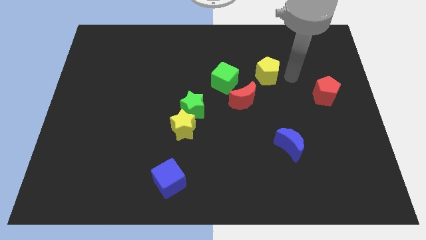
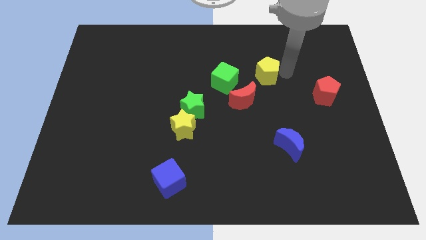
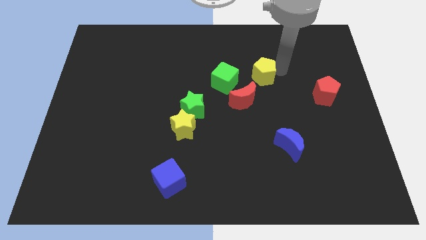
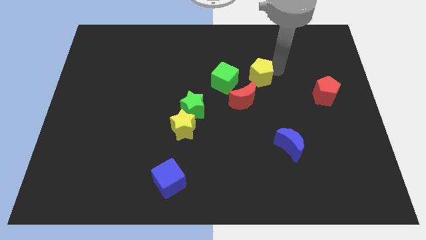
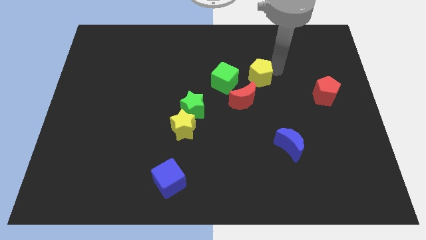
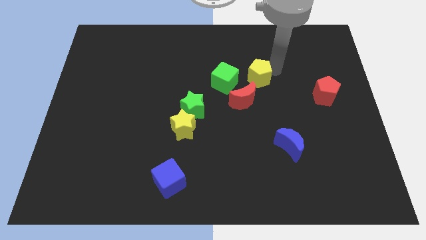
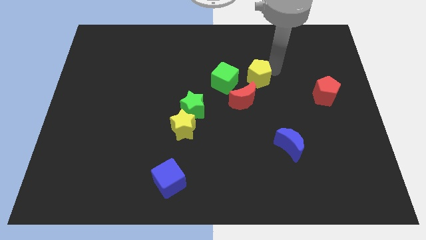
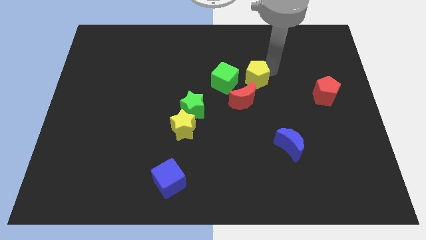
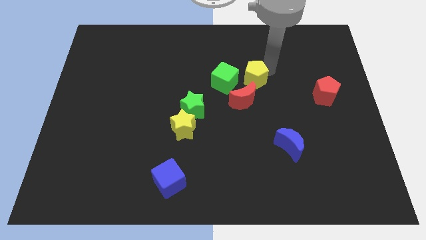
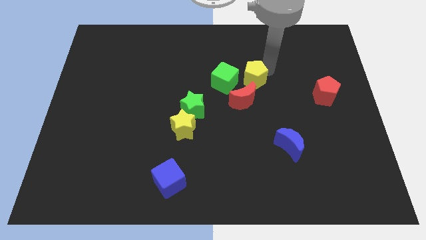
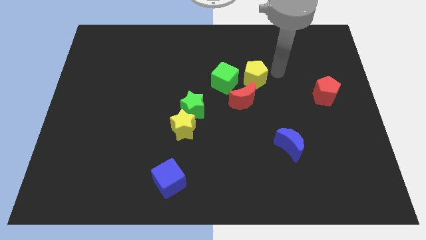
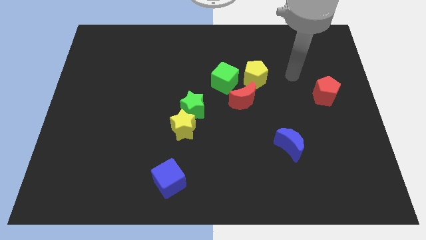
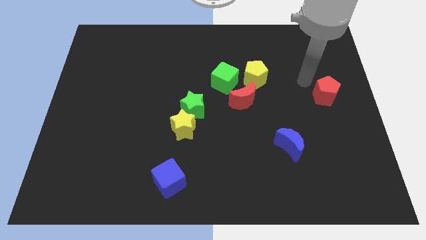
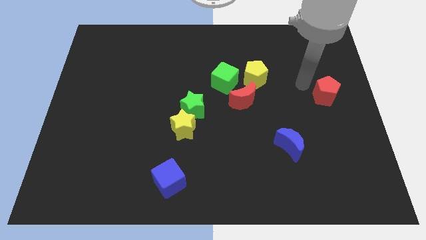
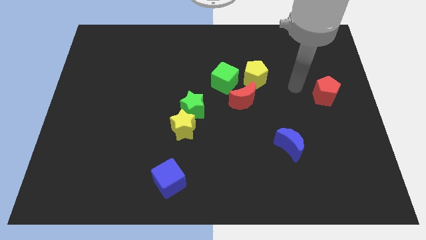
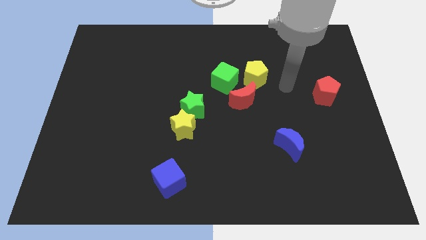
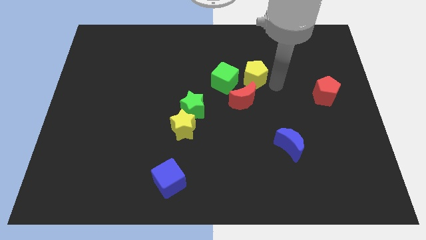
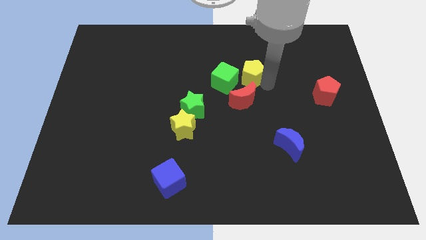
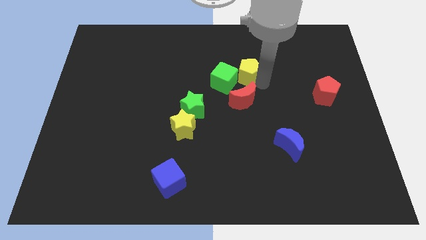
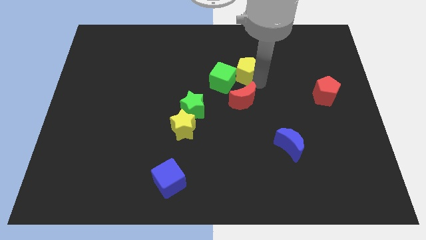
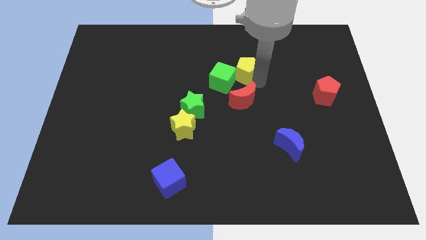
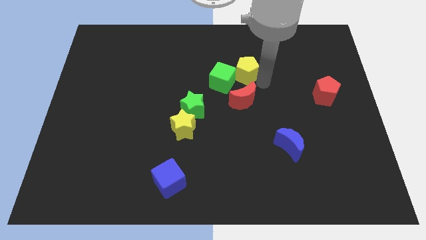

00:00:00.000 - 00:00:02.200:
touch the green cube with the yellow pentagon

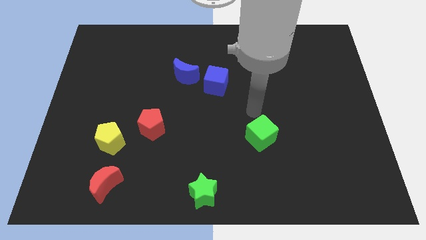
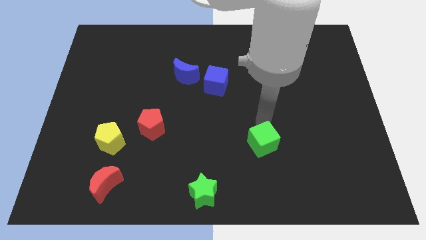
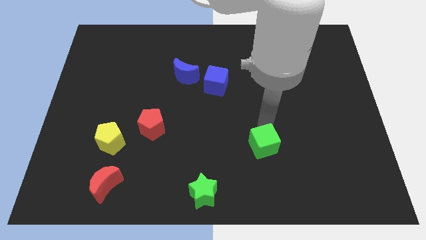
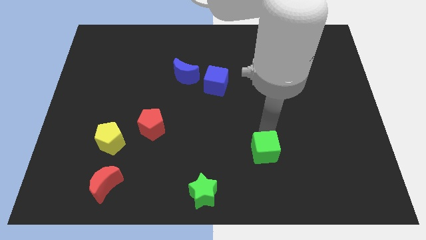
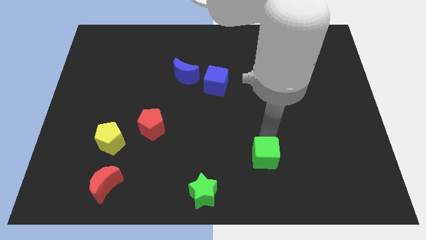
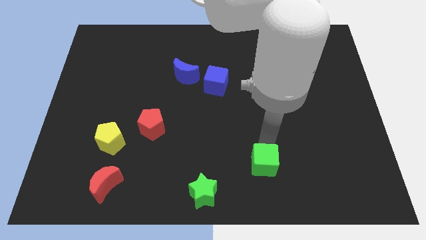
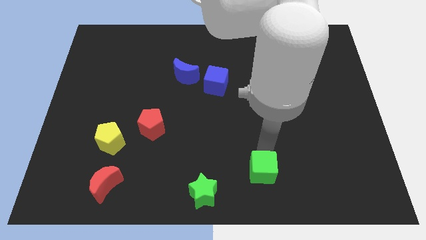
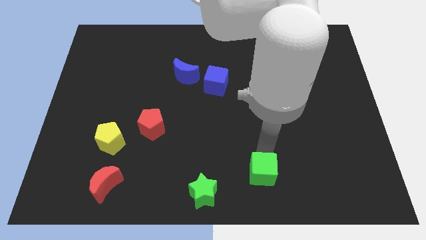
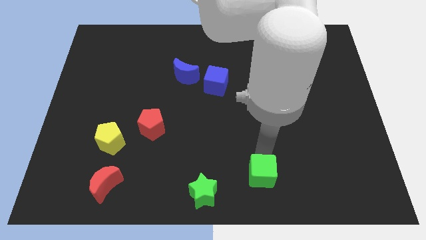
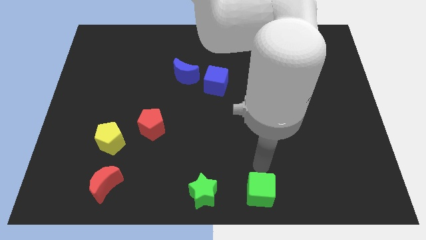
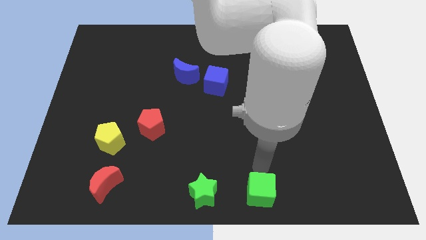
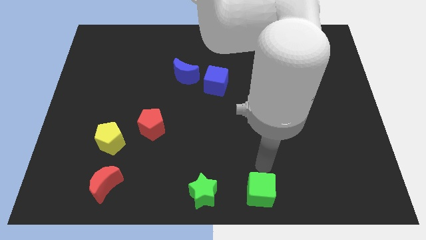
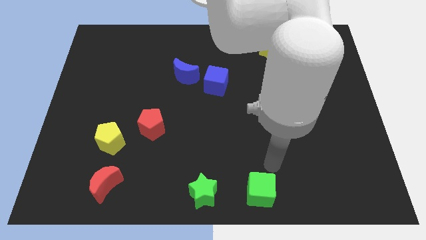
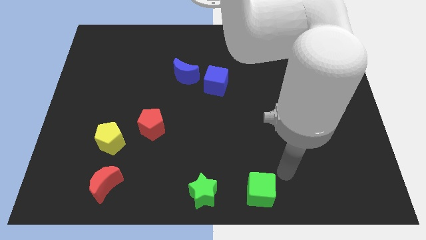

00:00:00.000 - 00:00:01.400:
push the green cube to the right of the green star

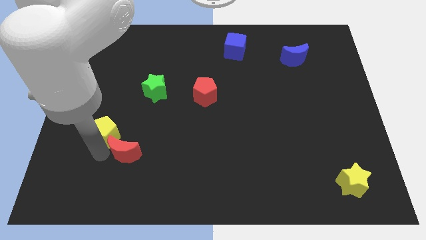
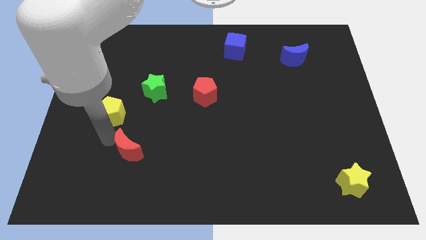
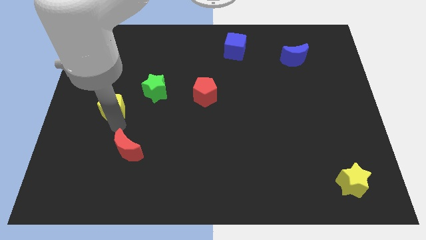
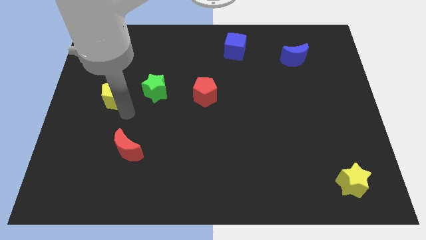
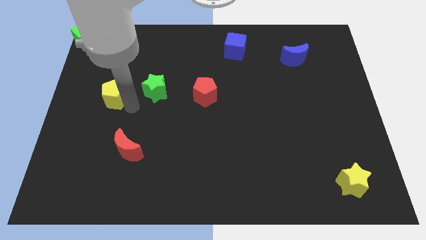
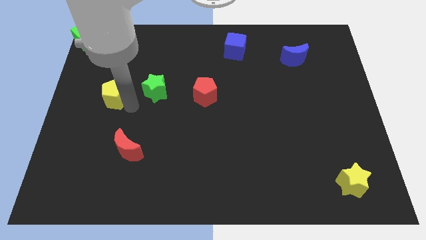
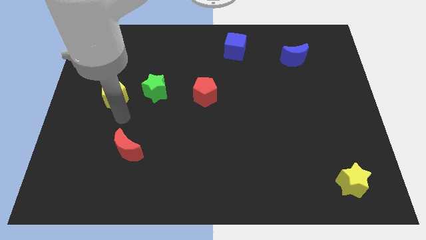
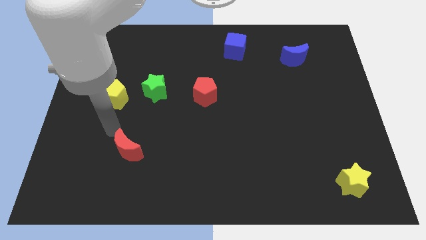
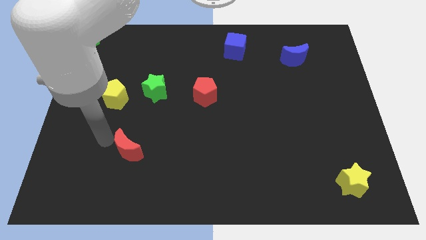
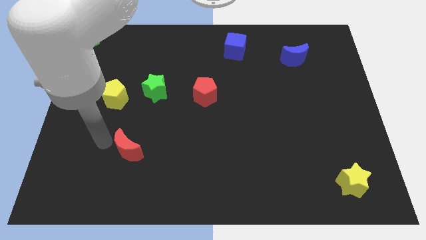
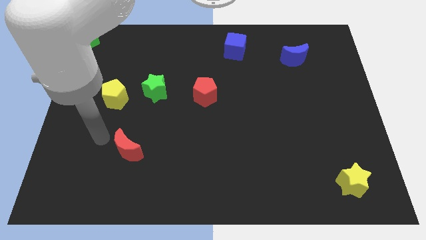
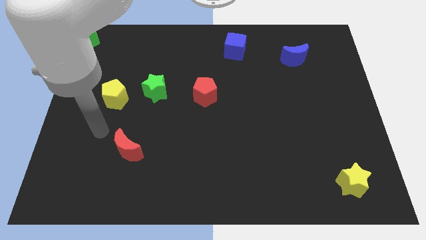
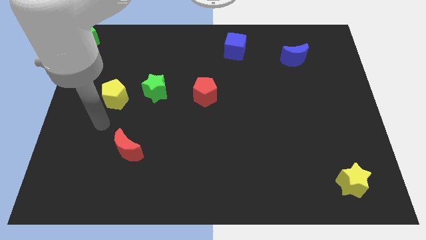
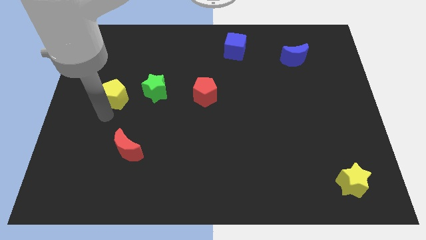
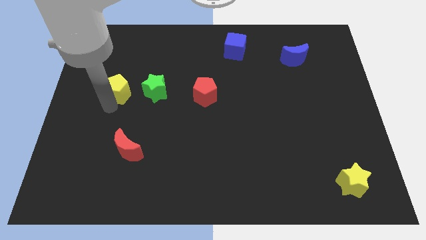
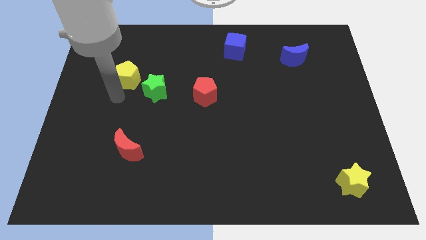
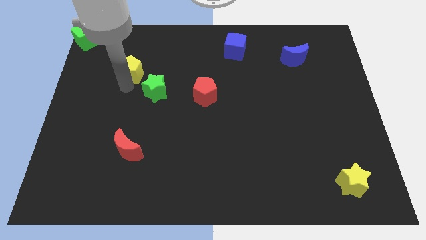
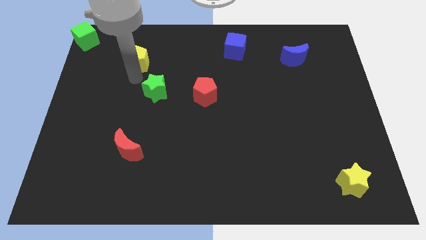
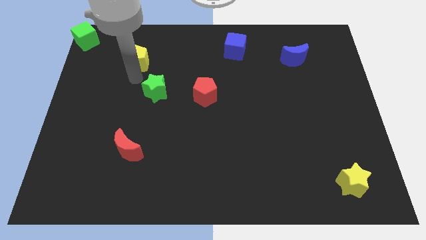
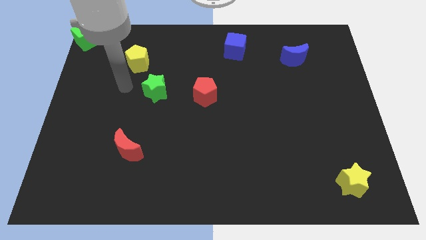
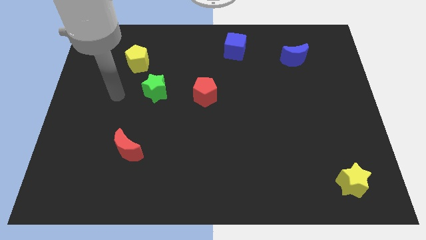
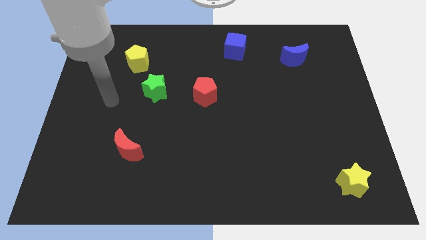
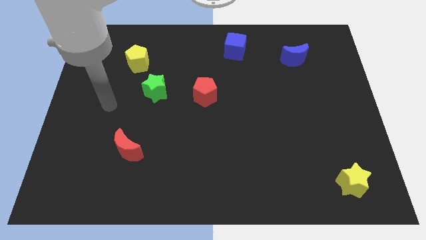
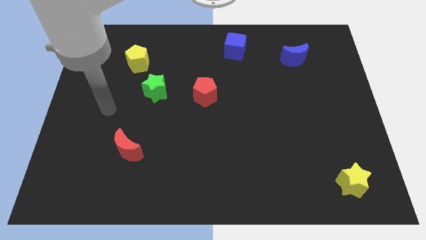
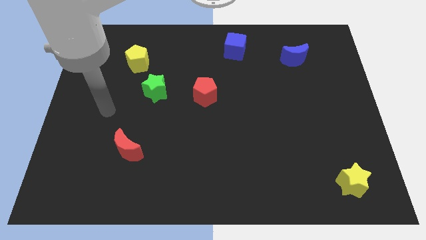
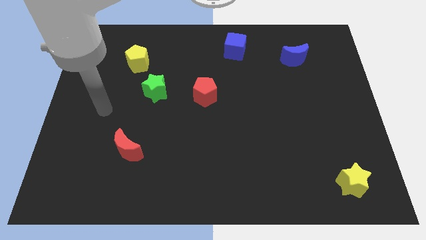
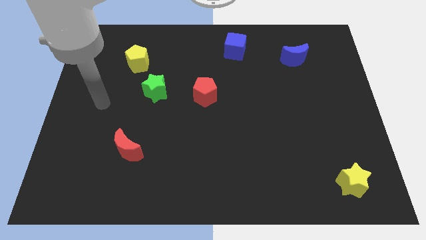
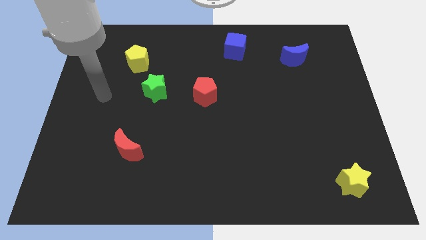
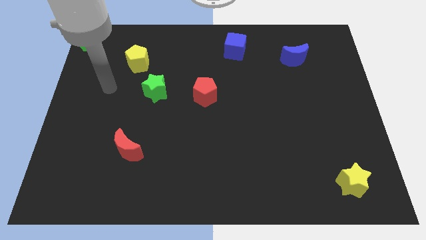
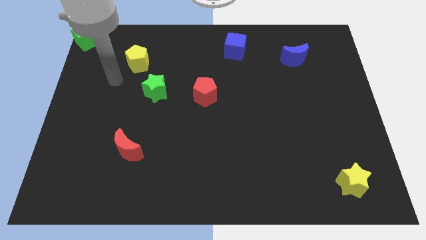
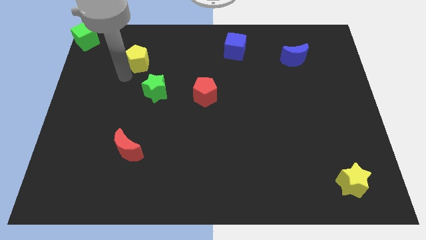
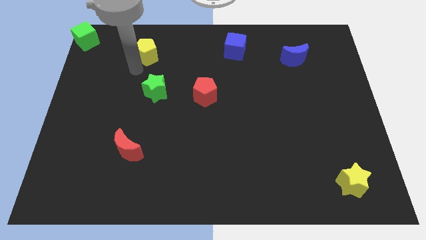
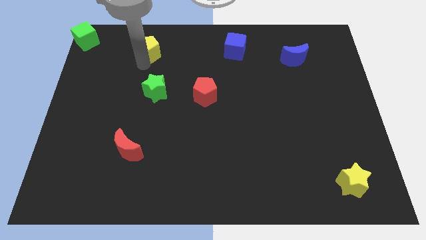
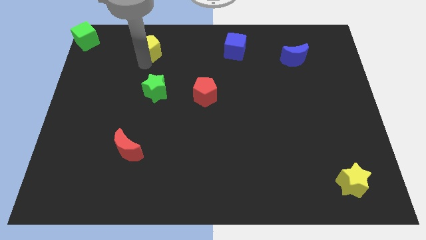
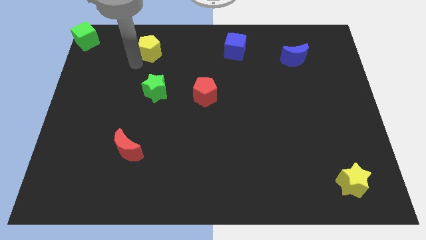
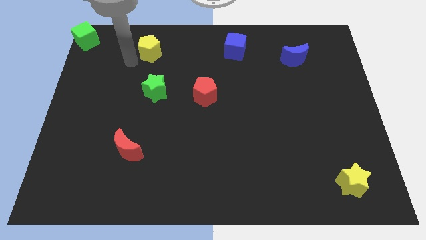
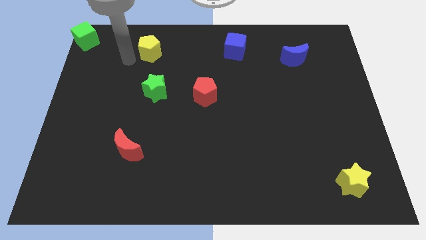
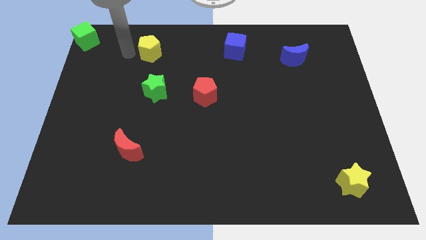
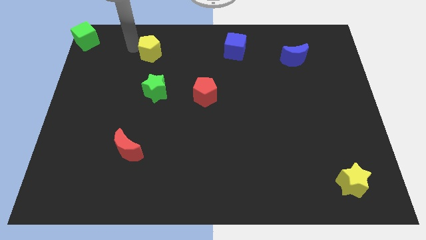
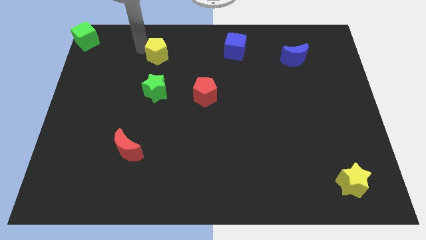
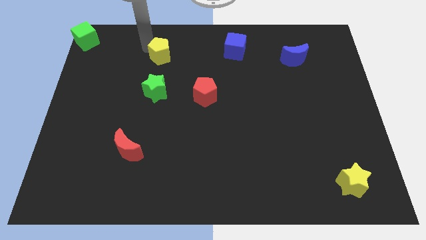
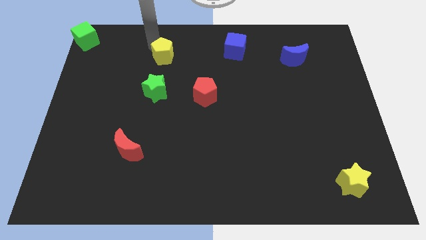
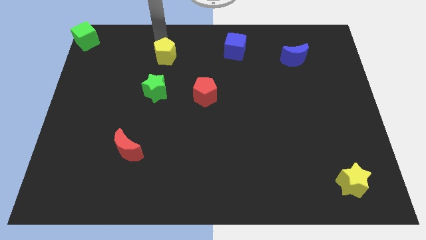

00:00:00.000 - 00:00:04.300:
place the yellow pentagon vertically above the green star

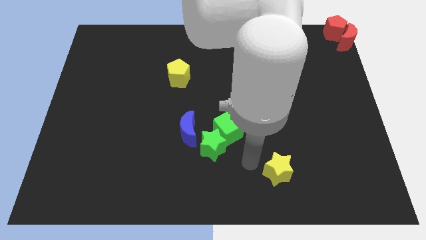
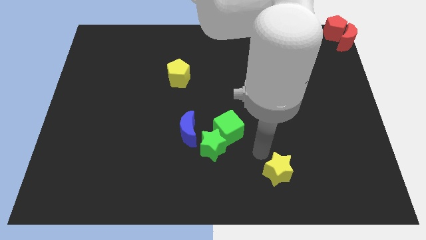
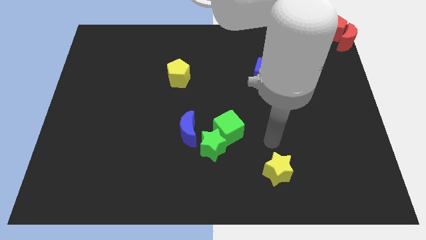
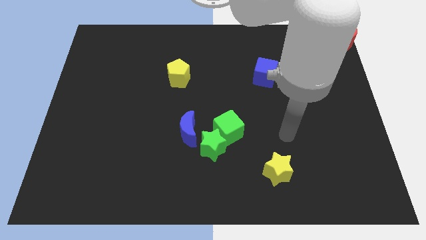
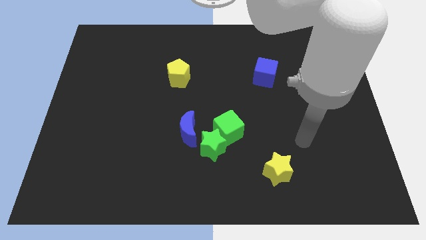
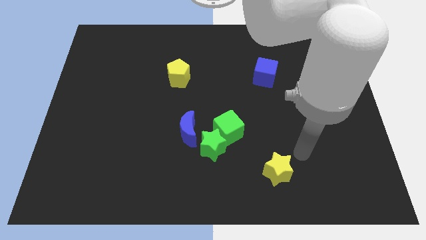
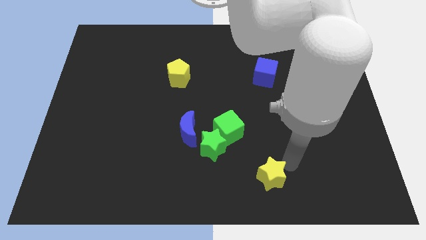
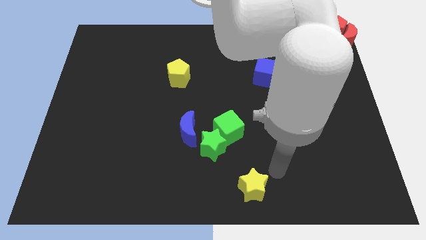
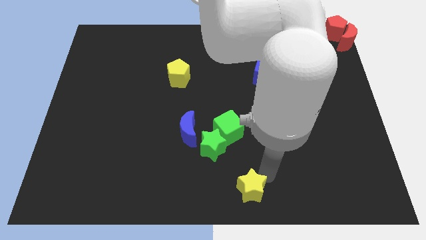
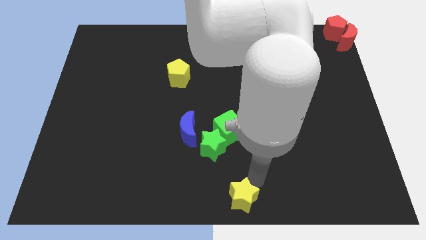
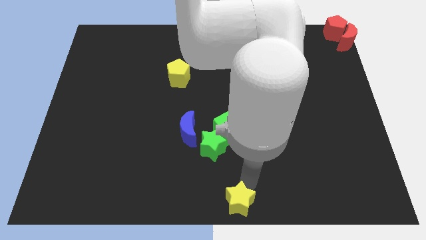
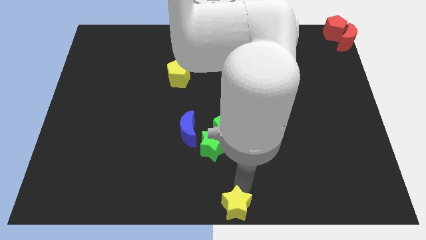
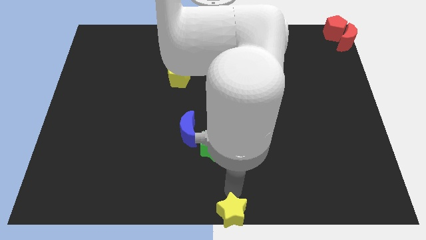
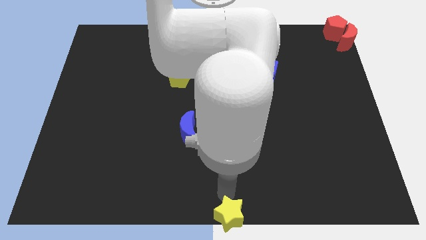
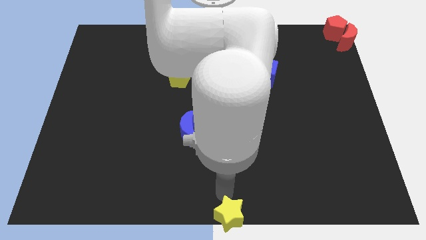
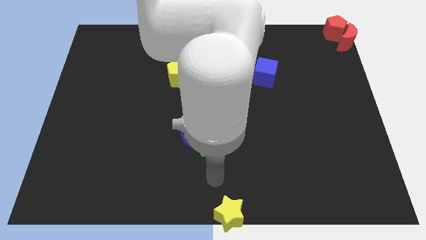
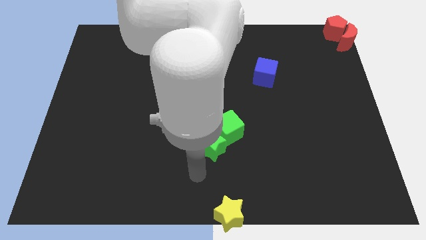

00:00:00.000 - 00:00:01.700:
place the yellow star at the bottom center of the board
